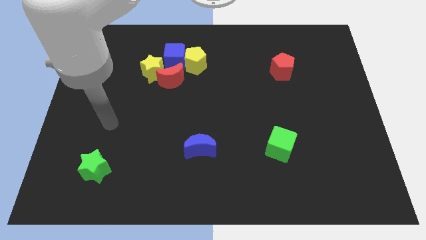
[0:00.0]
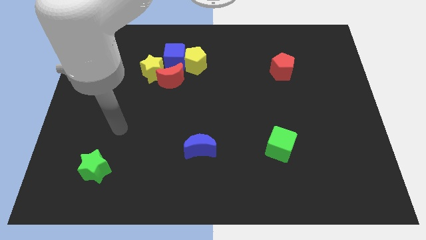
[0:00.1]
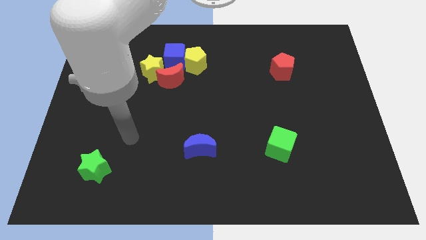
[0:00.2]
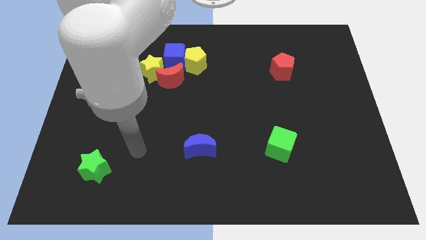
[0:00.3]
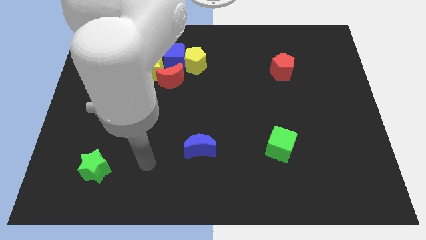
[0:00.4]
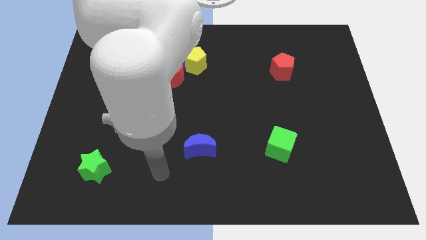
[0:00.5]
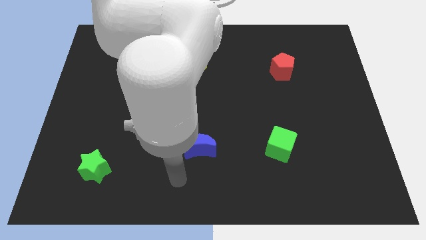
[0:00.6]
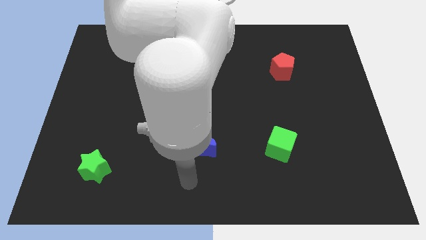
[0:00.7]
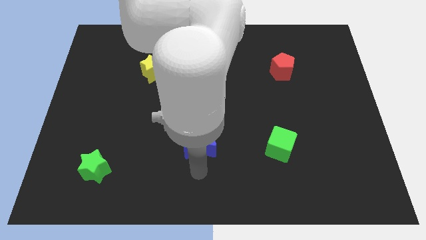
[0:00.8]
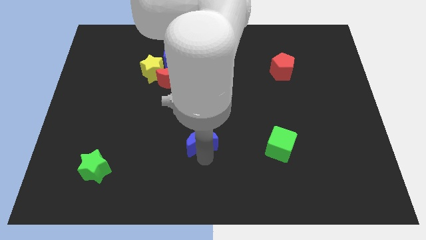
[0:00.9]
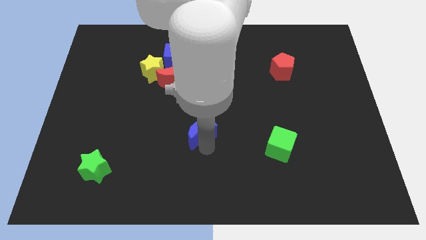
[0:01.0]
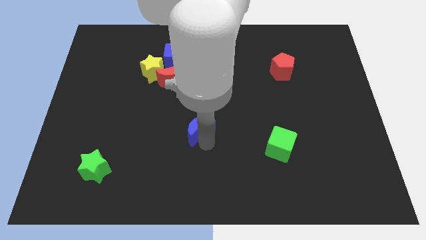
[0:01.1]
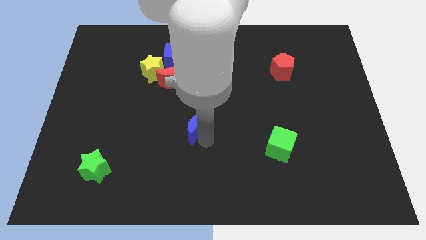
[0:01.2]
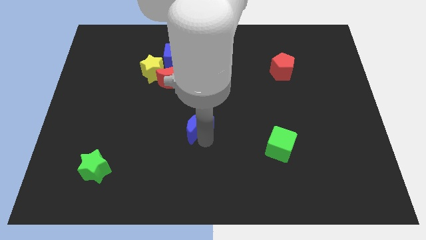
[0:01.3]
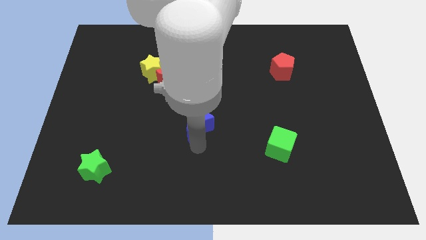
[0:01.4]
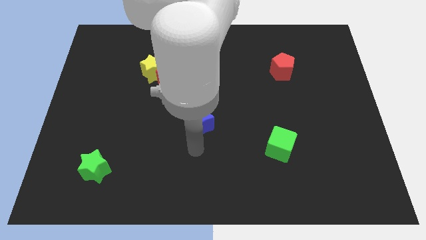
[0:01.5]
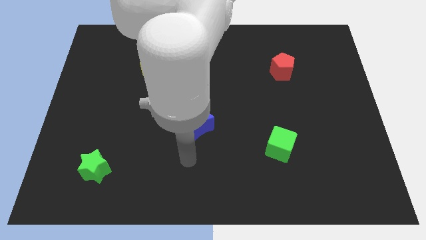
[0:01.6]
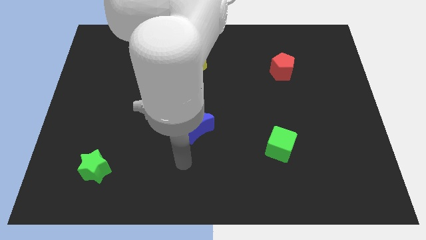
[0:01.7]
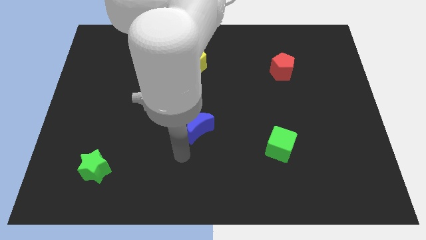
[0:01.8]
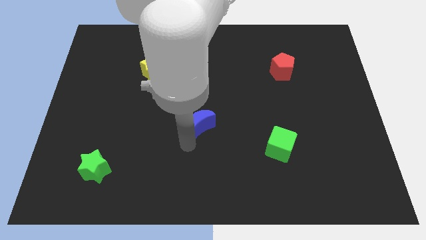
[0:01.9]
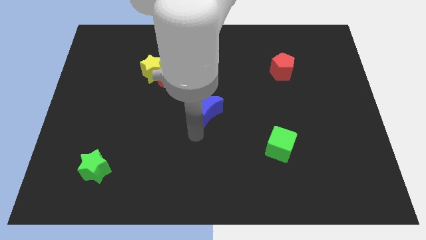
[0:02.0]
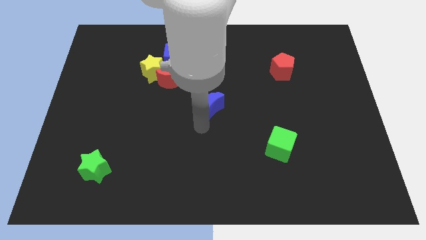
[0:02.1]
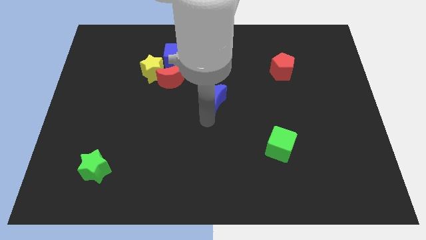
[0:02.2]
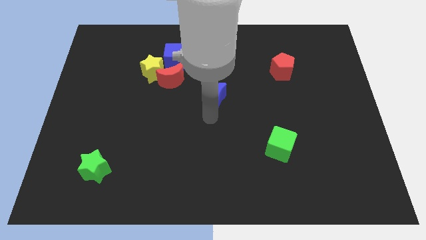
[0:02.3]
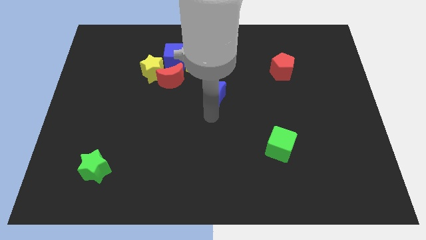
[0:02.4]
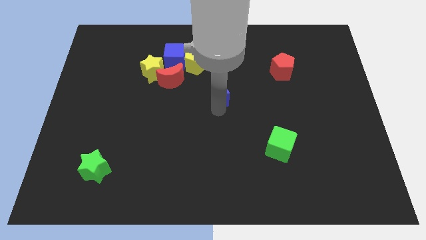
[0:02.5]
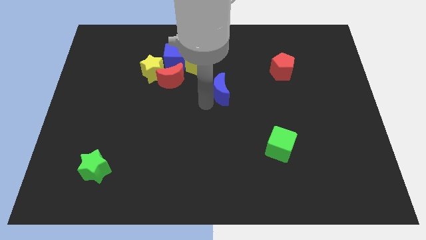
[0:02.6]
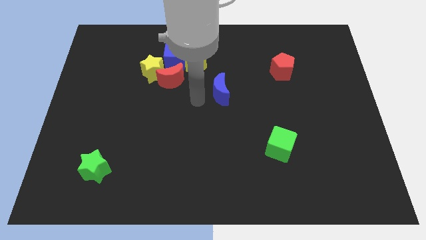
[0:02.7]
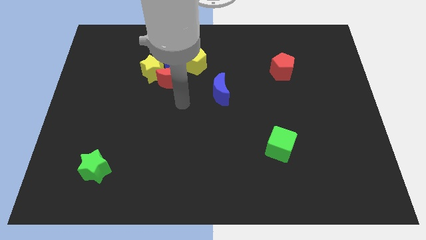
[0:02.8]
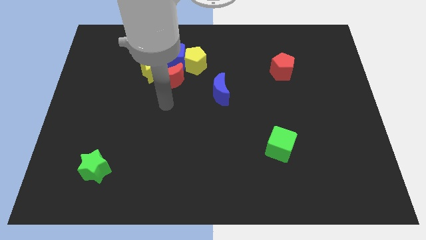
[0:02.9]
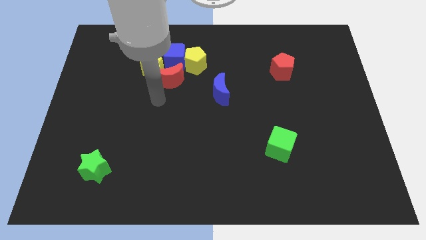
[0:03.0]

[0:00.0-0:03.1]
place blue crescent diagonally top left to the green cube

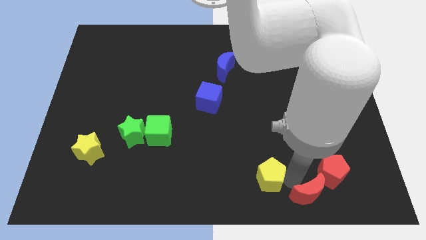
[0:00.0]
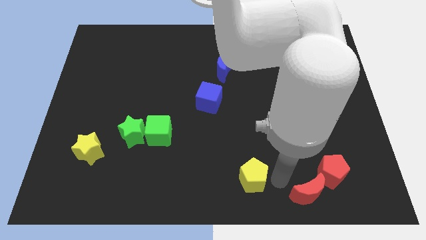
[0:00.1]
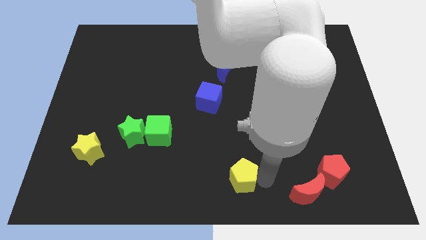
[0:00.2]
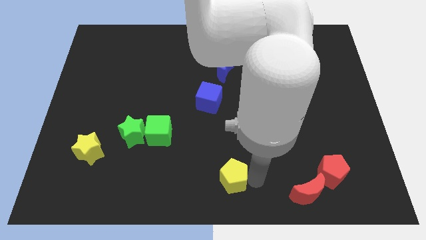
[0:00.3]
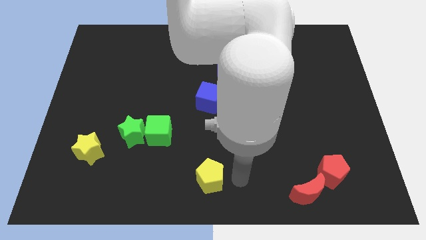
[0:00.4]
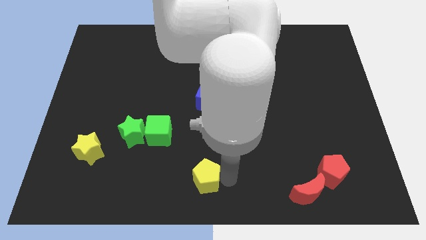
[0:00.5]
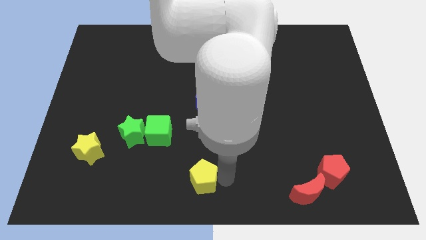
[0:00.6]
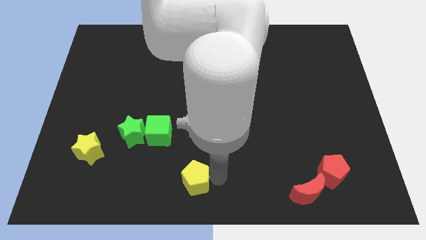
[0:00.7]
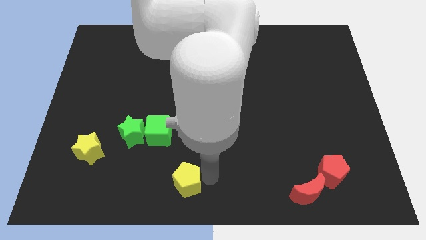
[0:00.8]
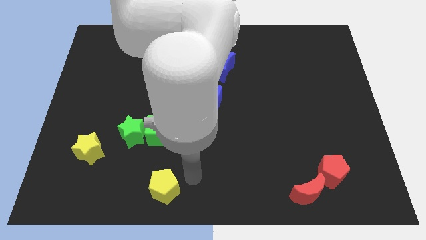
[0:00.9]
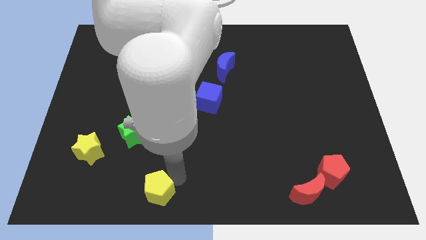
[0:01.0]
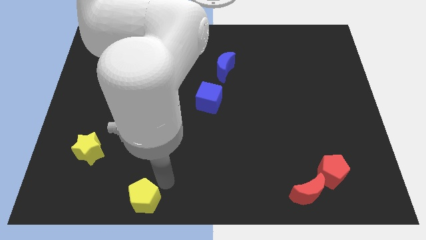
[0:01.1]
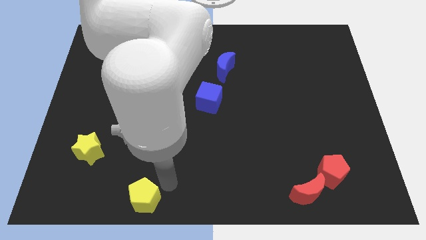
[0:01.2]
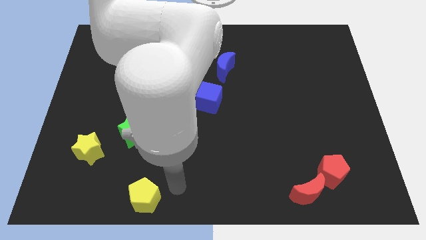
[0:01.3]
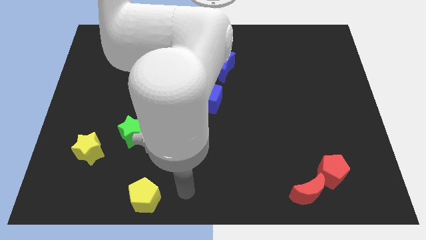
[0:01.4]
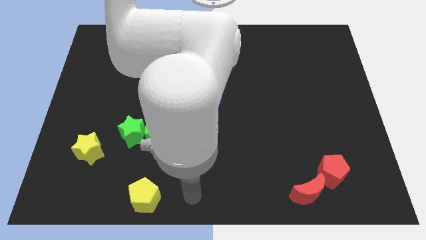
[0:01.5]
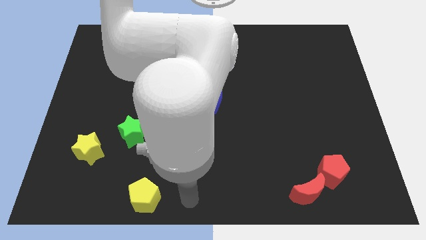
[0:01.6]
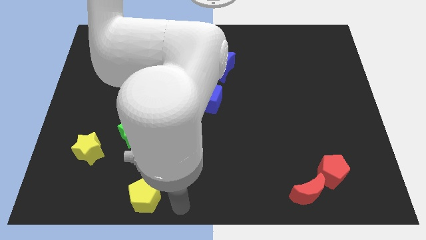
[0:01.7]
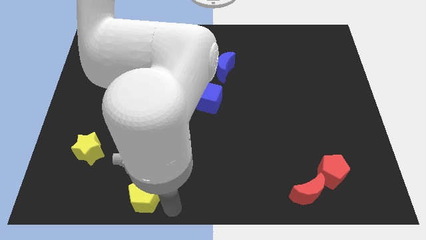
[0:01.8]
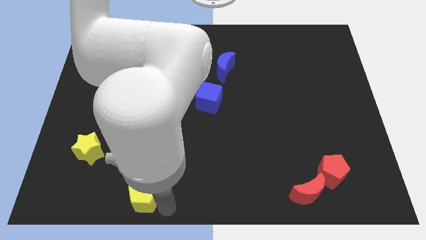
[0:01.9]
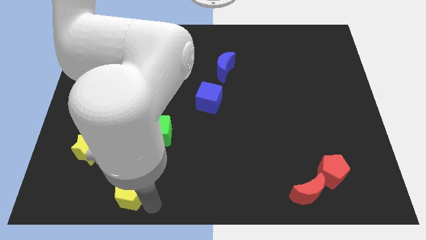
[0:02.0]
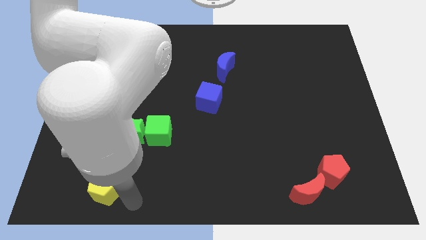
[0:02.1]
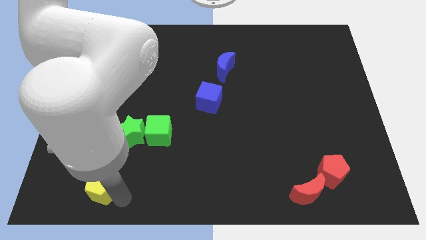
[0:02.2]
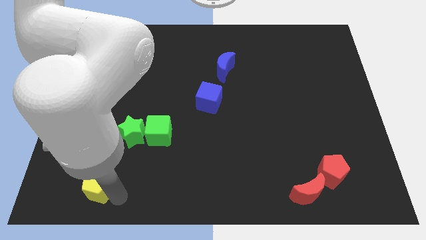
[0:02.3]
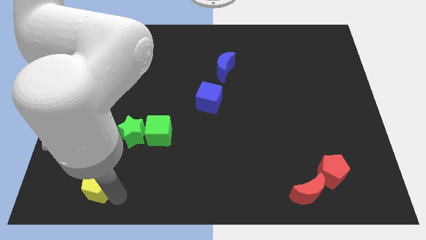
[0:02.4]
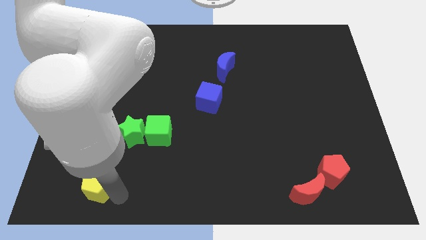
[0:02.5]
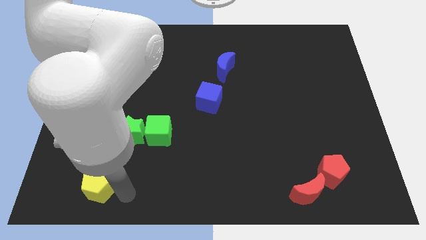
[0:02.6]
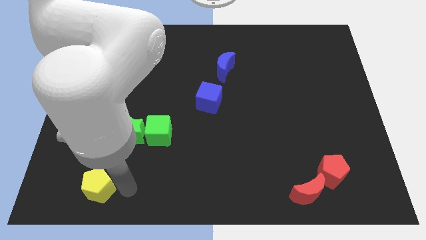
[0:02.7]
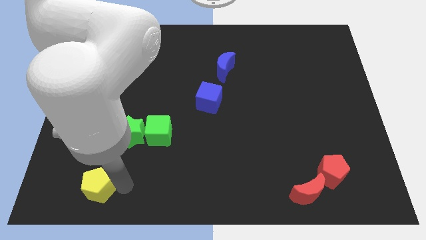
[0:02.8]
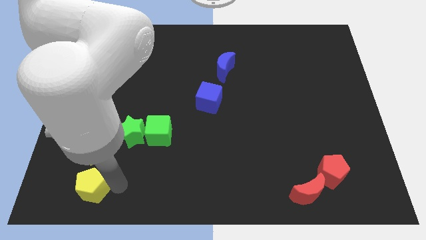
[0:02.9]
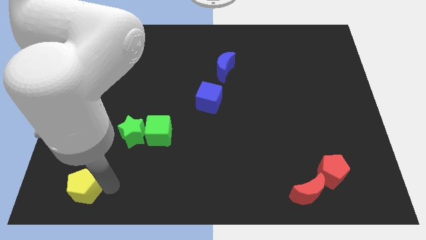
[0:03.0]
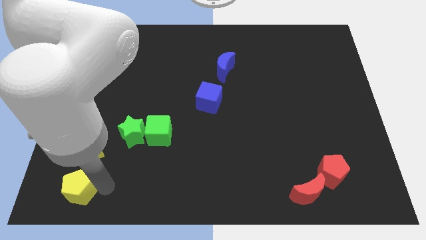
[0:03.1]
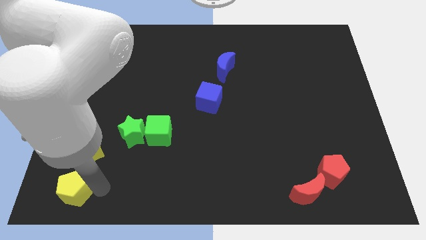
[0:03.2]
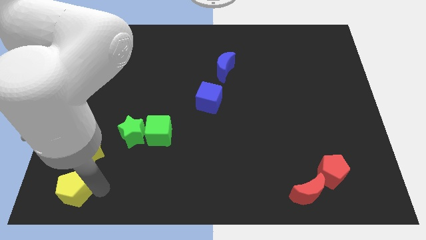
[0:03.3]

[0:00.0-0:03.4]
drag the yellow pentagon to the left

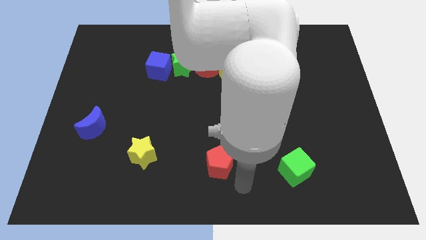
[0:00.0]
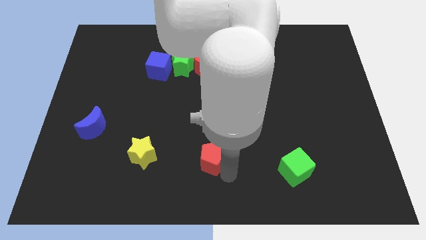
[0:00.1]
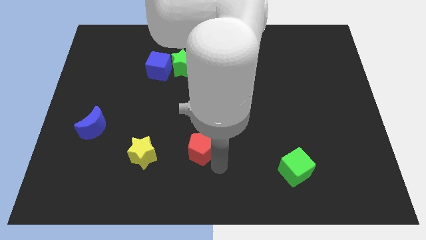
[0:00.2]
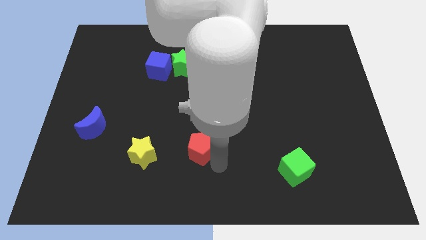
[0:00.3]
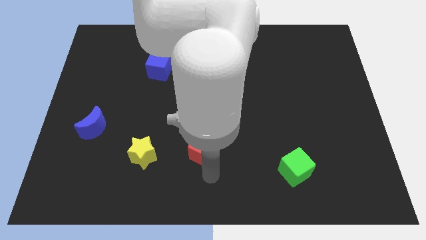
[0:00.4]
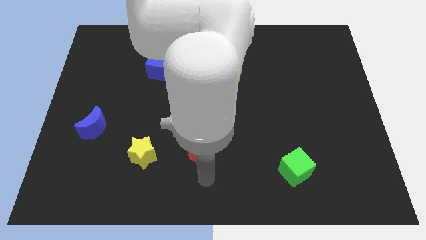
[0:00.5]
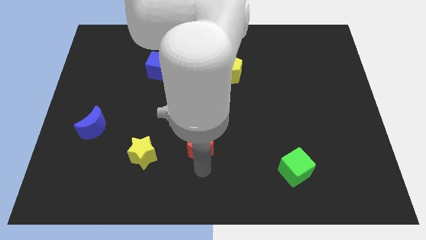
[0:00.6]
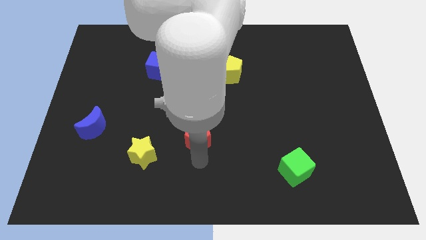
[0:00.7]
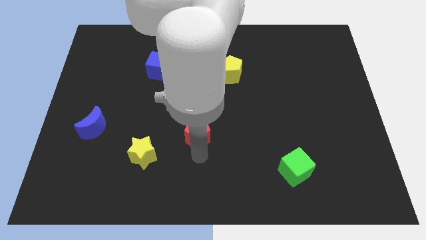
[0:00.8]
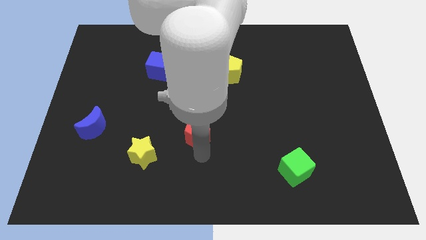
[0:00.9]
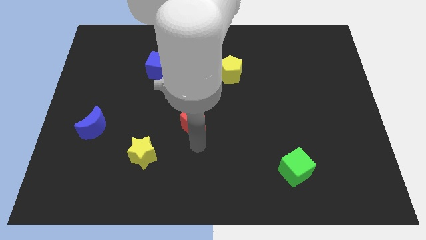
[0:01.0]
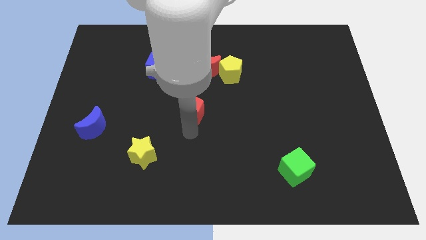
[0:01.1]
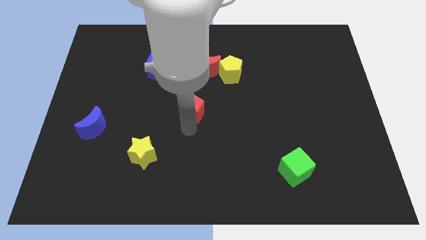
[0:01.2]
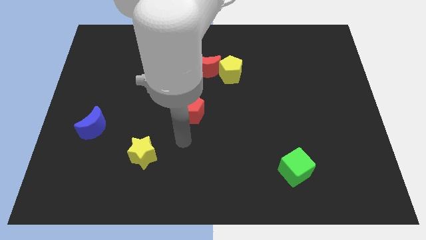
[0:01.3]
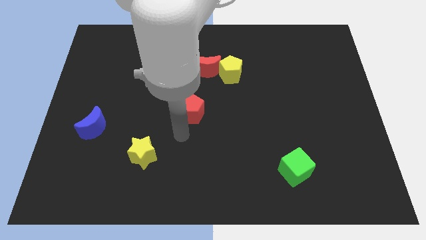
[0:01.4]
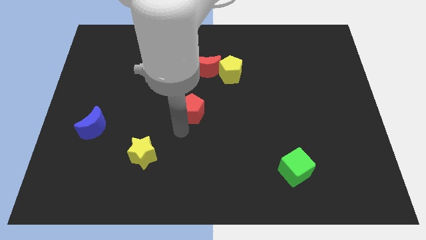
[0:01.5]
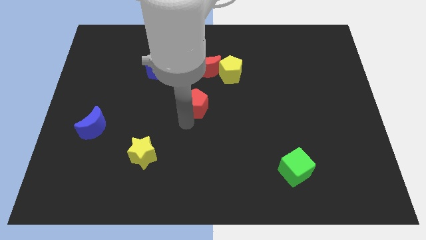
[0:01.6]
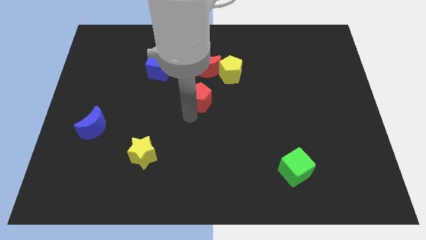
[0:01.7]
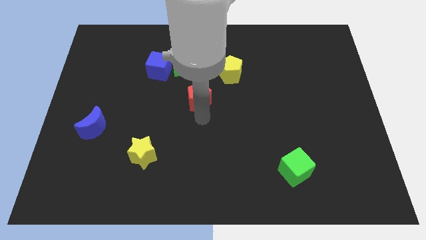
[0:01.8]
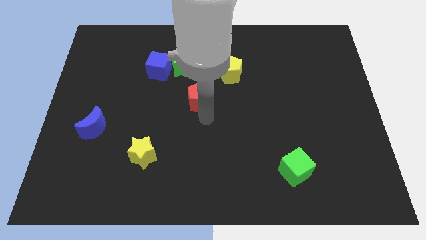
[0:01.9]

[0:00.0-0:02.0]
place the red pentagon to the centre of the board

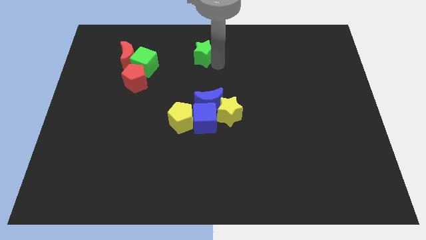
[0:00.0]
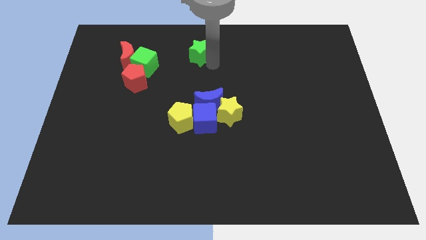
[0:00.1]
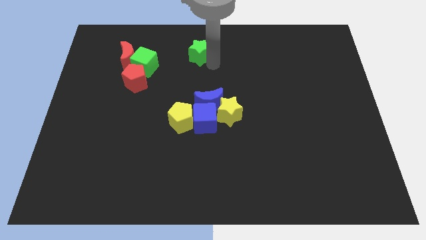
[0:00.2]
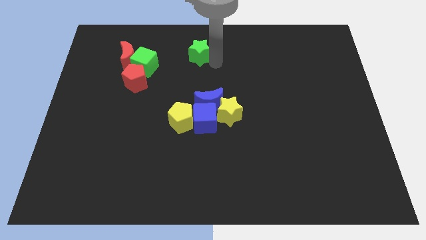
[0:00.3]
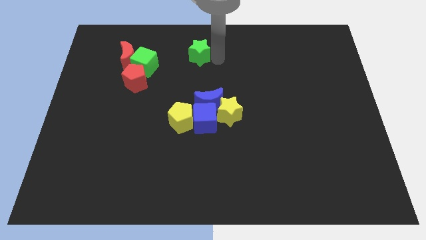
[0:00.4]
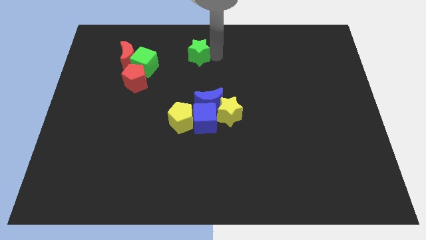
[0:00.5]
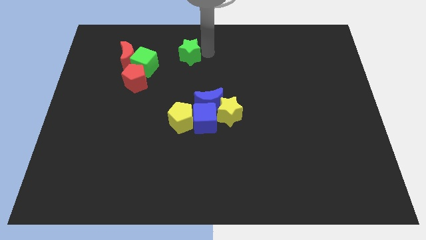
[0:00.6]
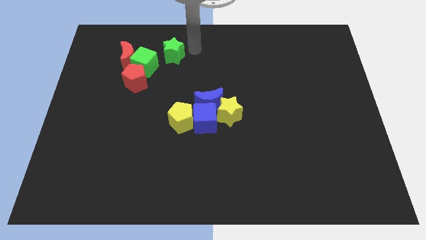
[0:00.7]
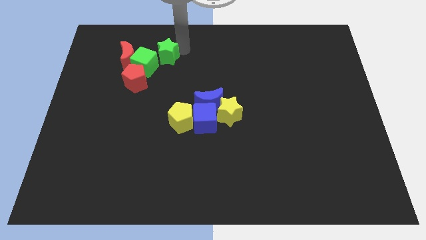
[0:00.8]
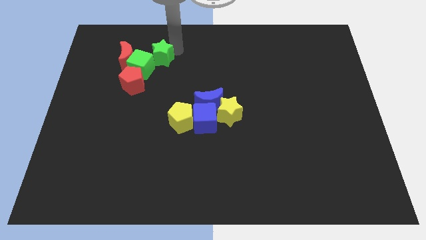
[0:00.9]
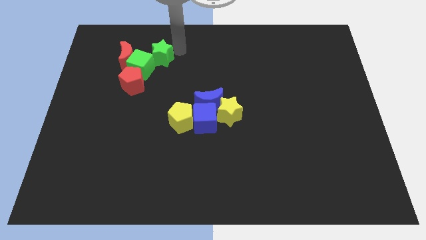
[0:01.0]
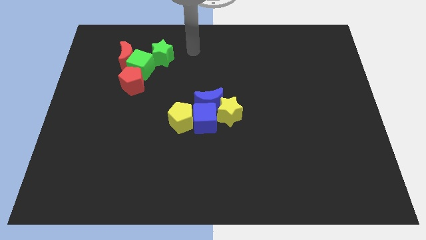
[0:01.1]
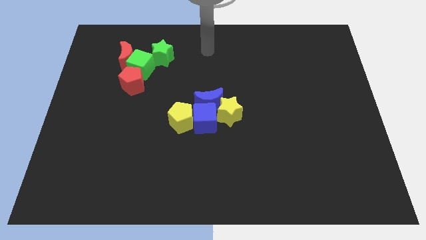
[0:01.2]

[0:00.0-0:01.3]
push the green star into the green cube
